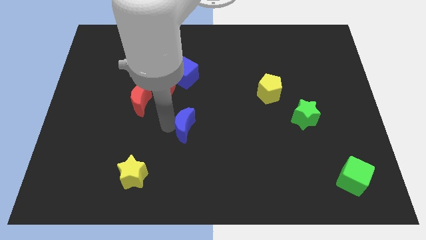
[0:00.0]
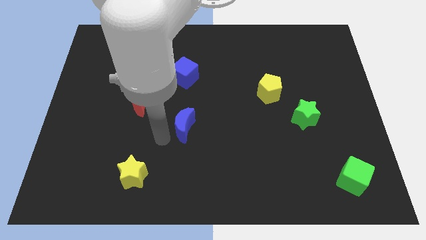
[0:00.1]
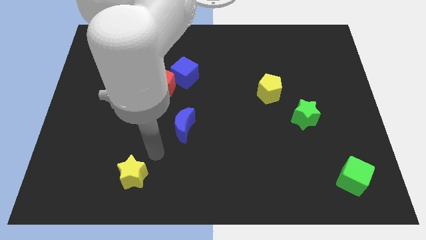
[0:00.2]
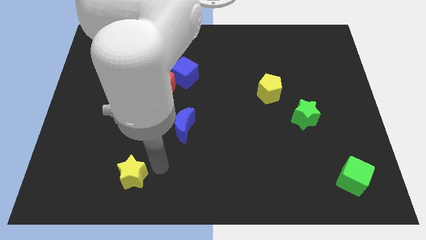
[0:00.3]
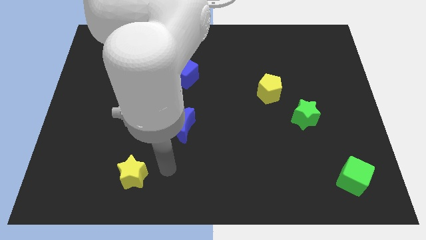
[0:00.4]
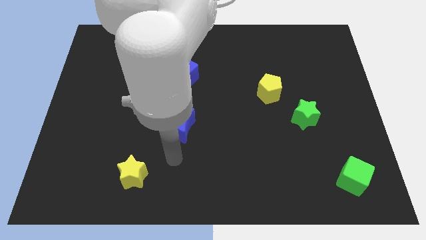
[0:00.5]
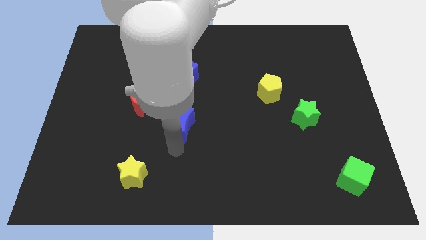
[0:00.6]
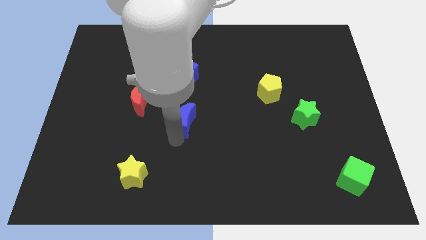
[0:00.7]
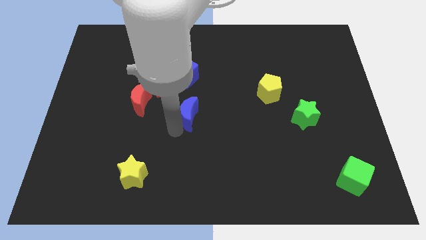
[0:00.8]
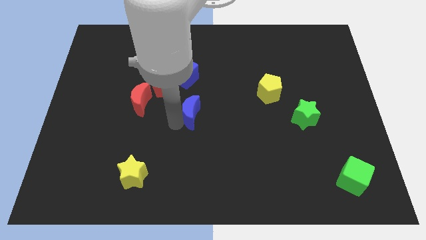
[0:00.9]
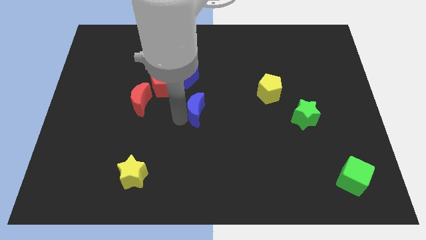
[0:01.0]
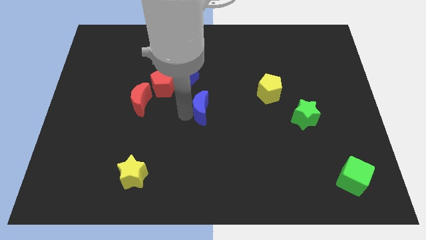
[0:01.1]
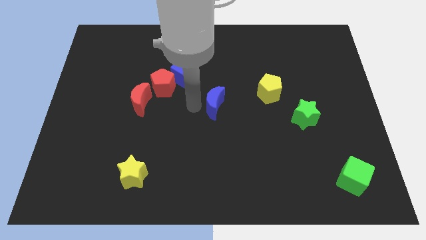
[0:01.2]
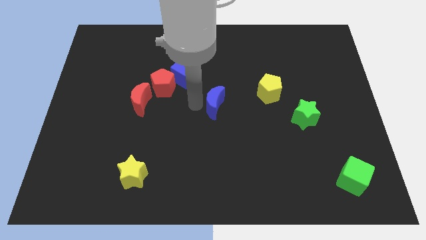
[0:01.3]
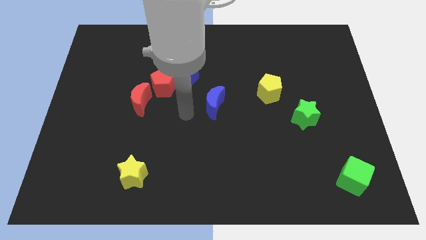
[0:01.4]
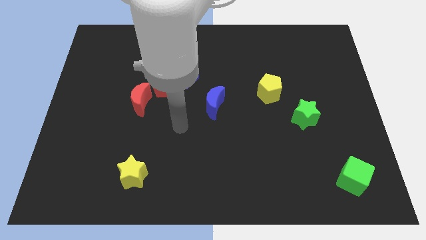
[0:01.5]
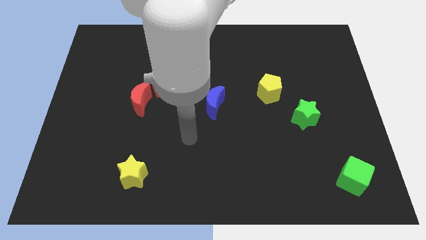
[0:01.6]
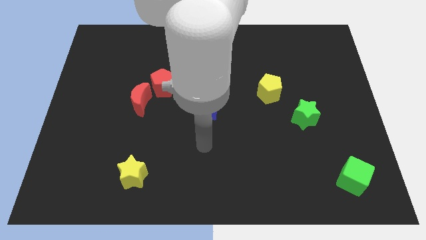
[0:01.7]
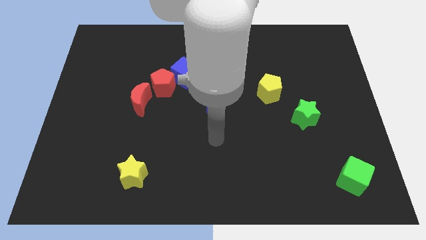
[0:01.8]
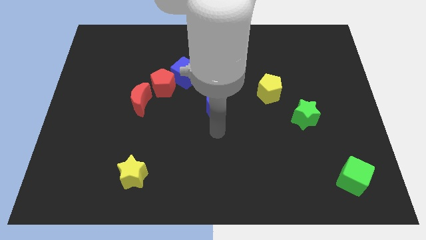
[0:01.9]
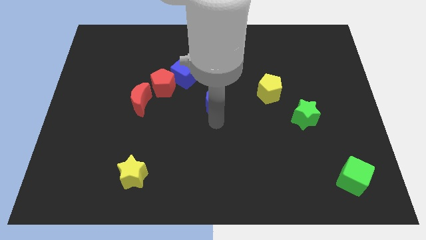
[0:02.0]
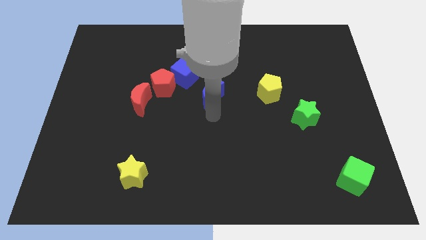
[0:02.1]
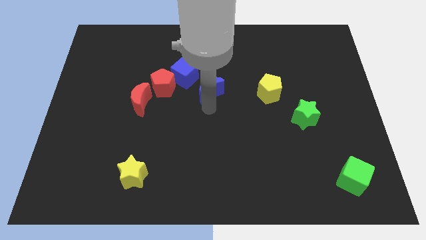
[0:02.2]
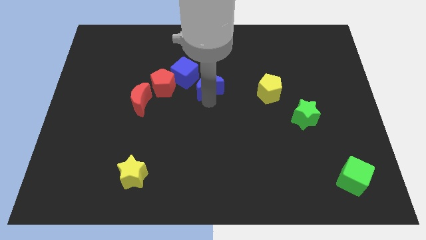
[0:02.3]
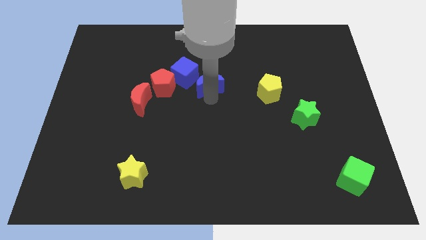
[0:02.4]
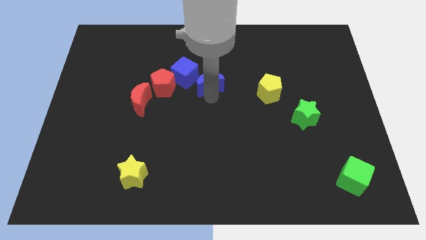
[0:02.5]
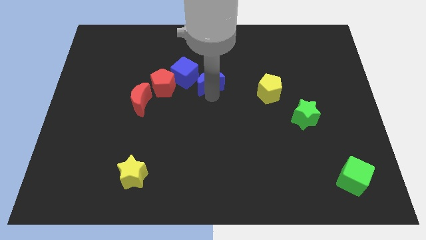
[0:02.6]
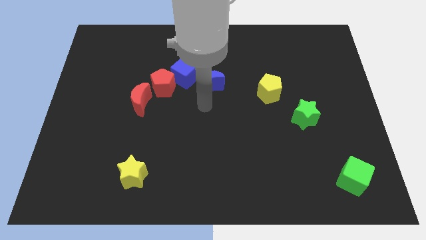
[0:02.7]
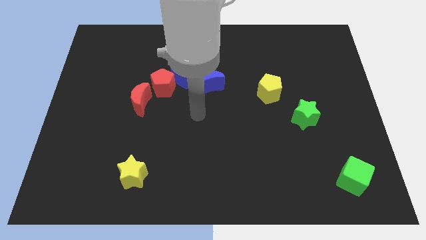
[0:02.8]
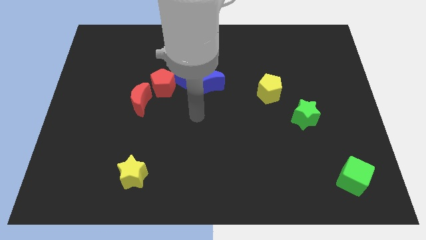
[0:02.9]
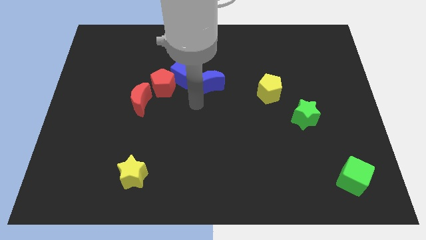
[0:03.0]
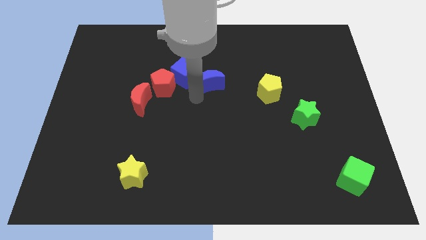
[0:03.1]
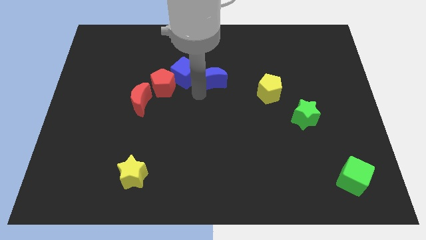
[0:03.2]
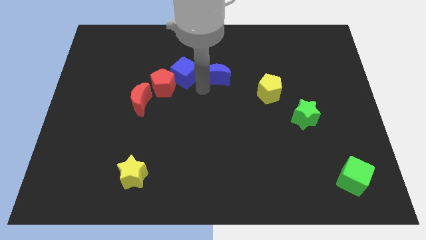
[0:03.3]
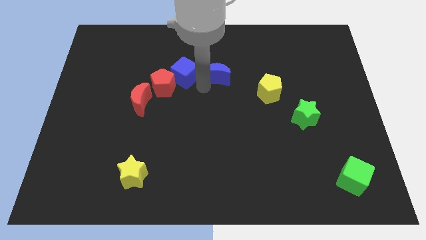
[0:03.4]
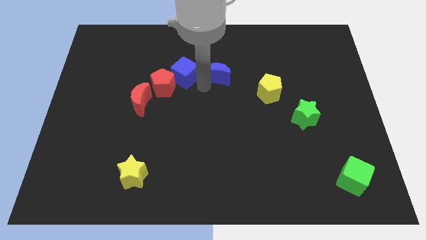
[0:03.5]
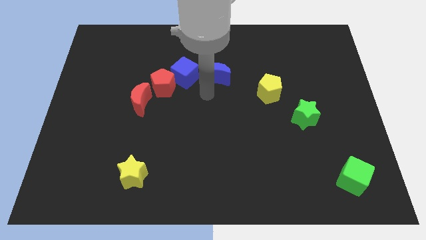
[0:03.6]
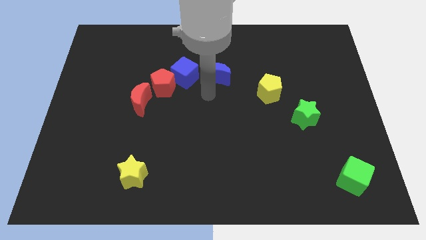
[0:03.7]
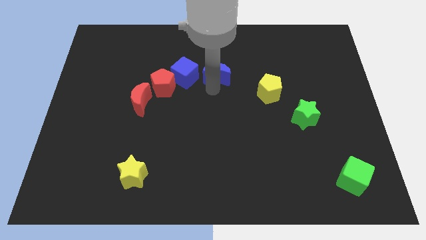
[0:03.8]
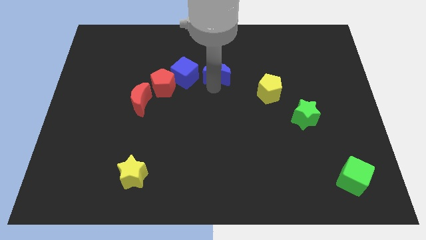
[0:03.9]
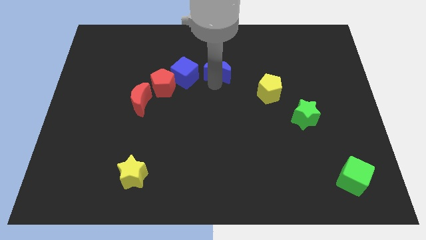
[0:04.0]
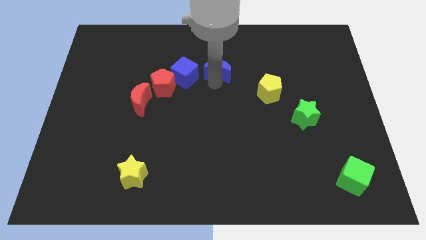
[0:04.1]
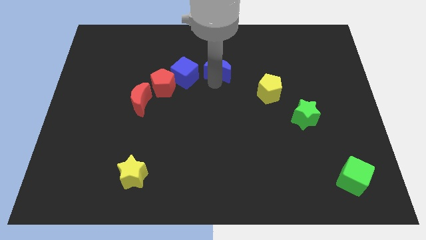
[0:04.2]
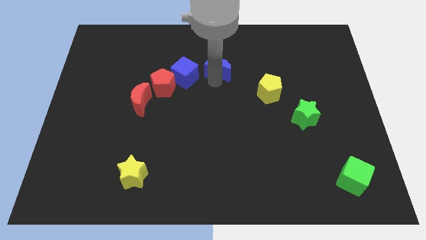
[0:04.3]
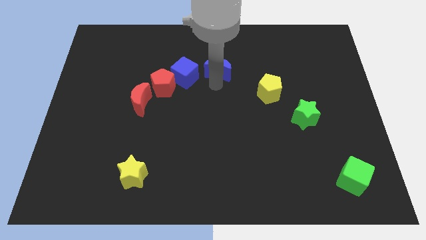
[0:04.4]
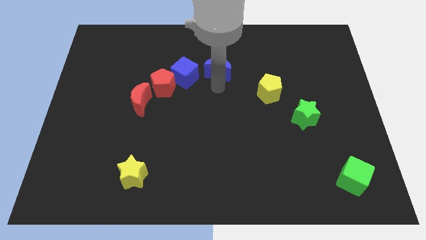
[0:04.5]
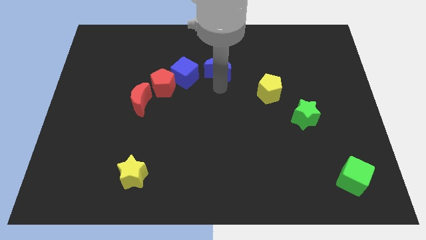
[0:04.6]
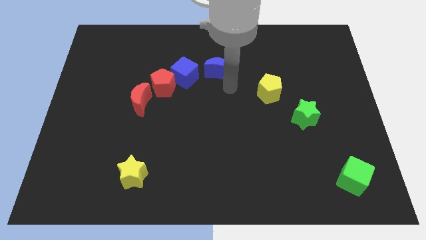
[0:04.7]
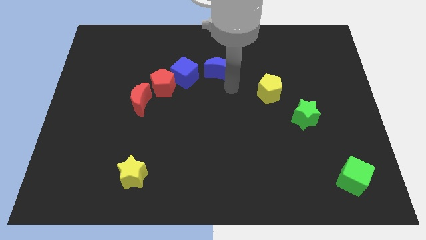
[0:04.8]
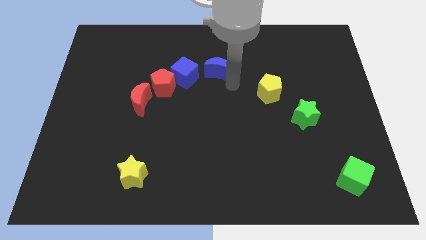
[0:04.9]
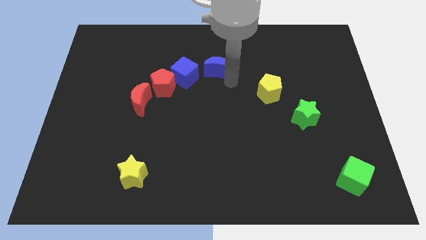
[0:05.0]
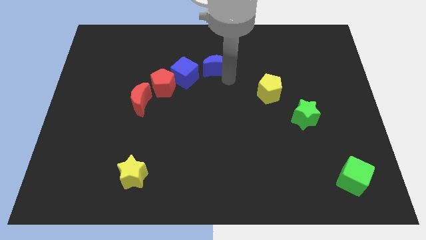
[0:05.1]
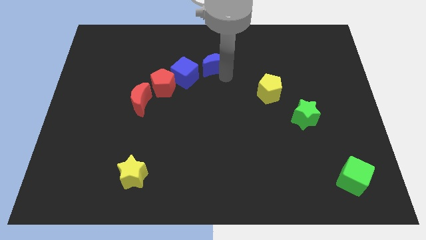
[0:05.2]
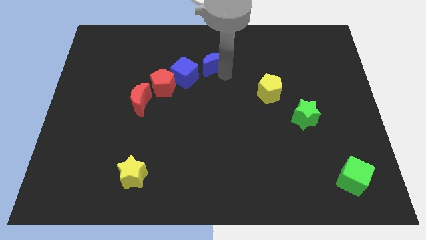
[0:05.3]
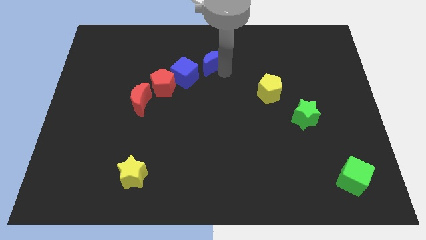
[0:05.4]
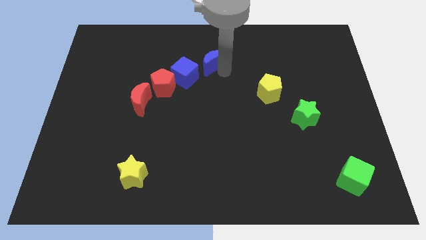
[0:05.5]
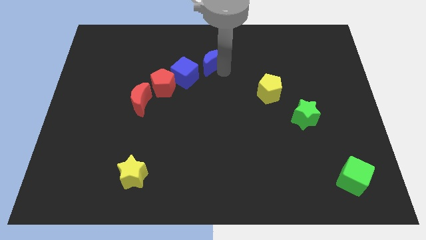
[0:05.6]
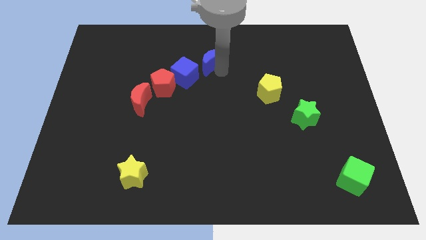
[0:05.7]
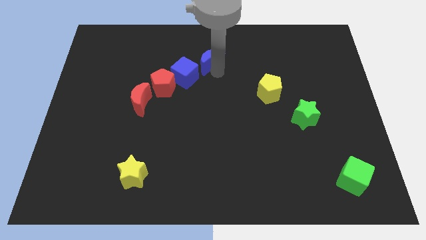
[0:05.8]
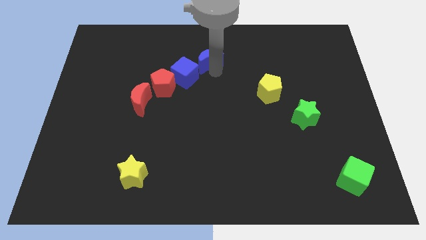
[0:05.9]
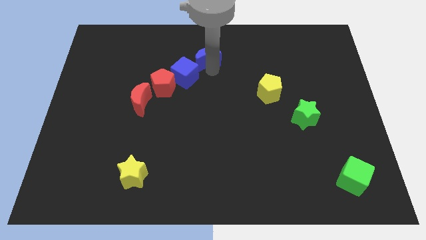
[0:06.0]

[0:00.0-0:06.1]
move the blue moon above the blue cube

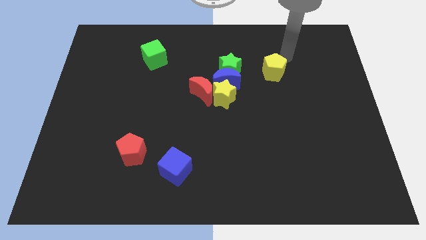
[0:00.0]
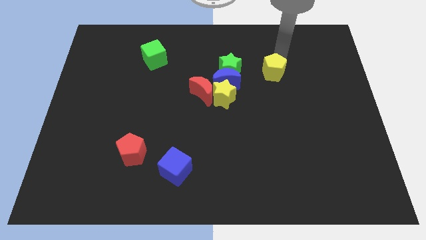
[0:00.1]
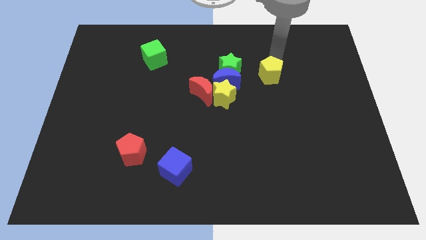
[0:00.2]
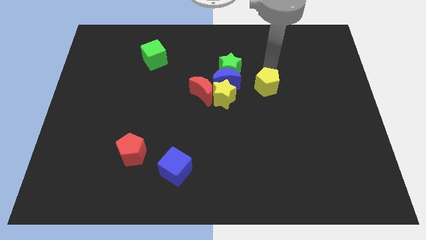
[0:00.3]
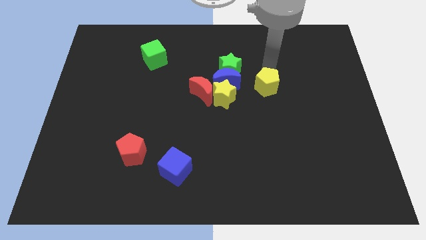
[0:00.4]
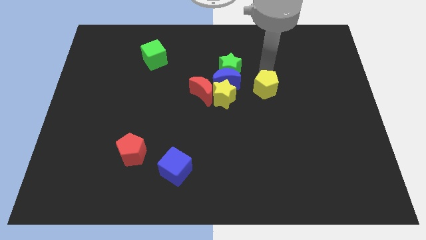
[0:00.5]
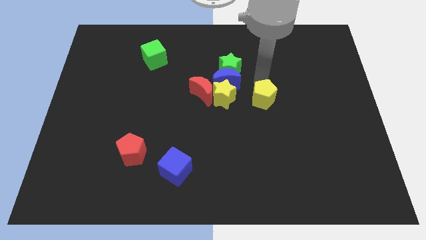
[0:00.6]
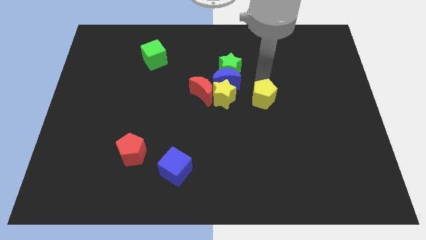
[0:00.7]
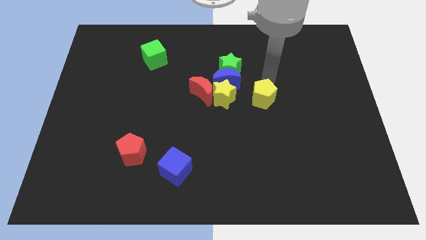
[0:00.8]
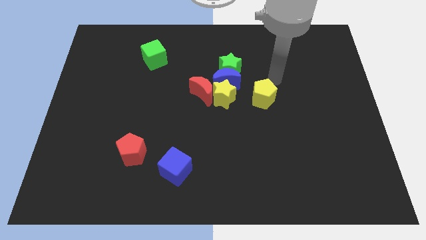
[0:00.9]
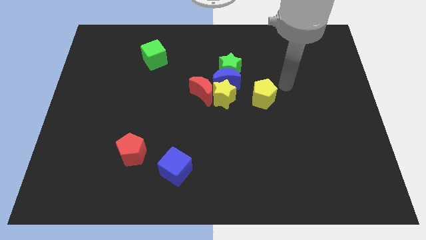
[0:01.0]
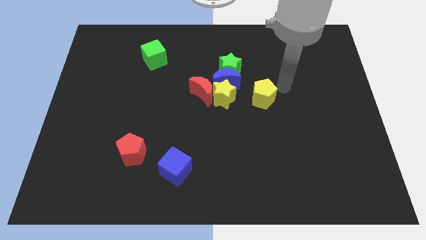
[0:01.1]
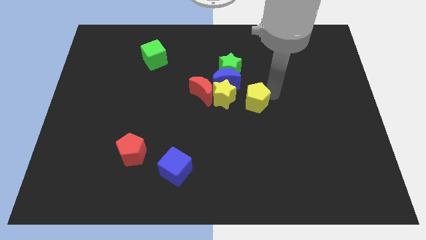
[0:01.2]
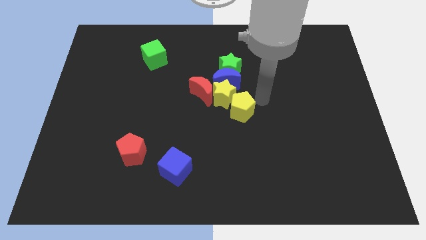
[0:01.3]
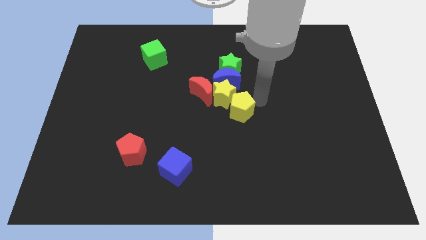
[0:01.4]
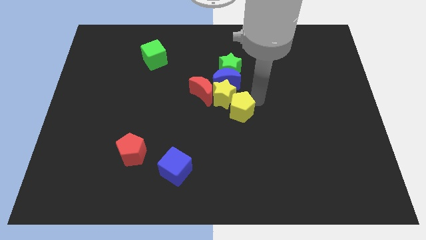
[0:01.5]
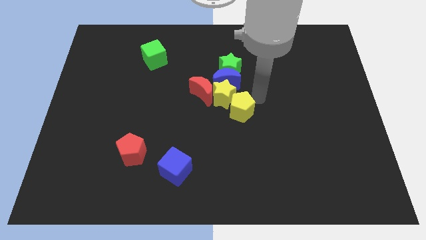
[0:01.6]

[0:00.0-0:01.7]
move the yellow pentagon diagonally right to the yellow star

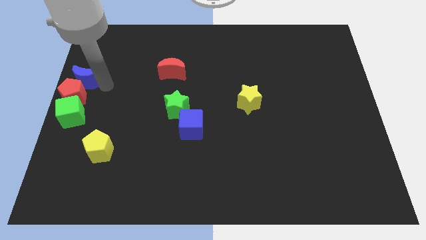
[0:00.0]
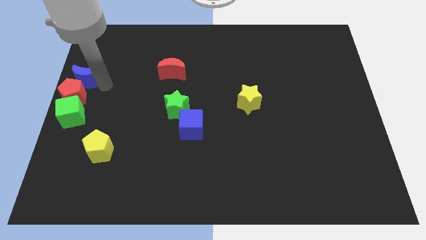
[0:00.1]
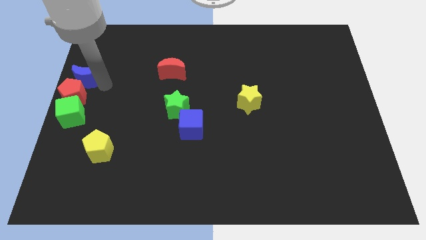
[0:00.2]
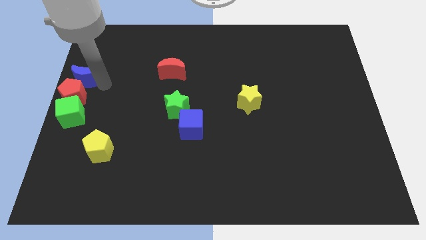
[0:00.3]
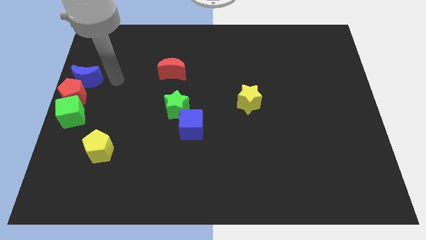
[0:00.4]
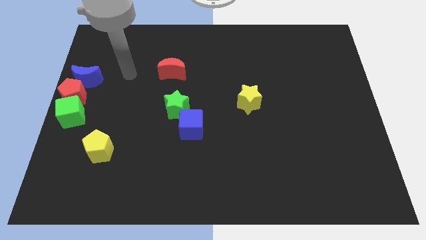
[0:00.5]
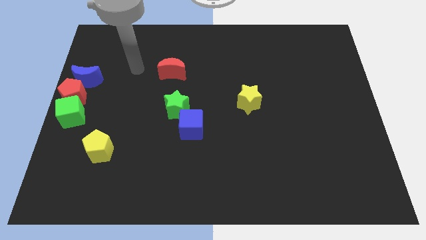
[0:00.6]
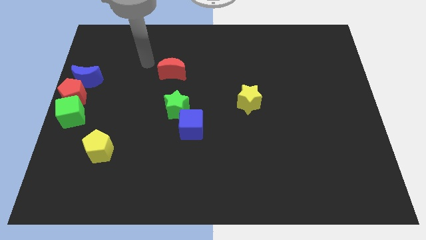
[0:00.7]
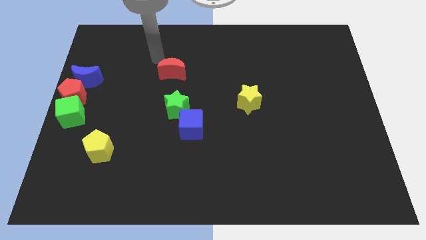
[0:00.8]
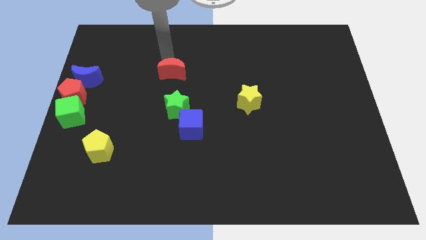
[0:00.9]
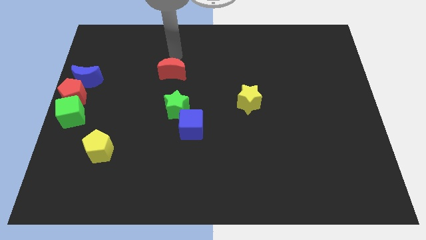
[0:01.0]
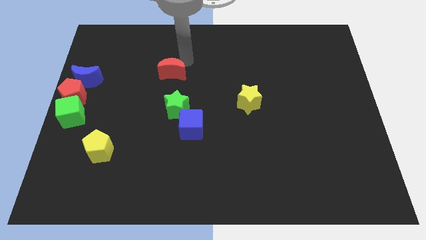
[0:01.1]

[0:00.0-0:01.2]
place the arm above the red moon
